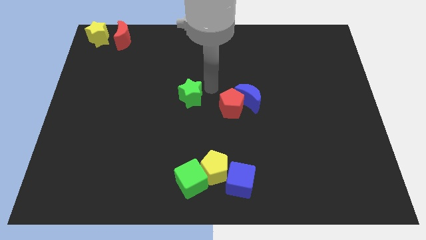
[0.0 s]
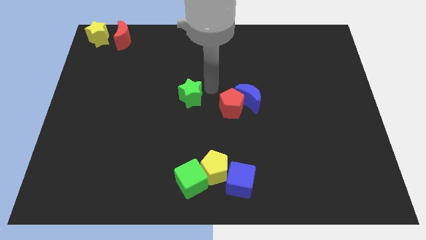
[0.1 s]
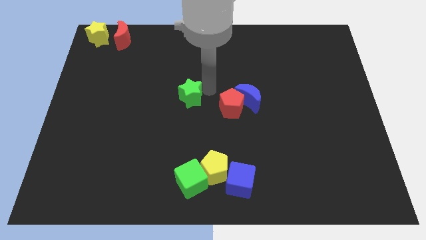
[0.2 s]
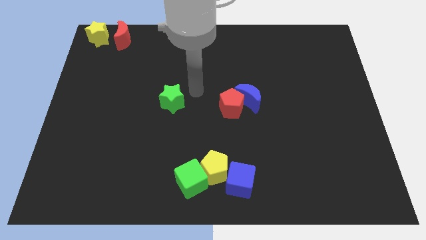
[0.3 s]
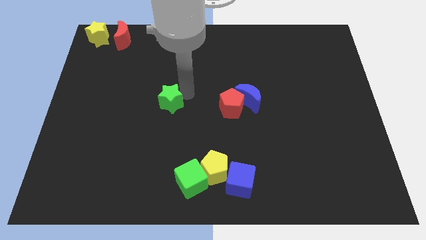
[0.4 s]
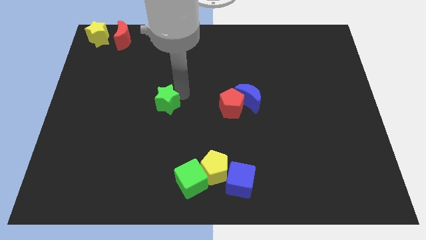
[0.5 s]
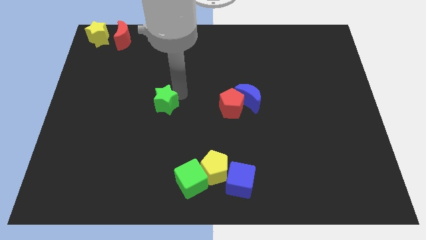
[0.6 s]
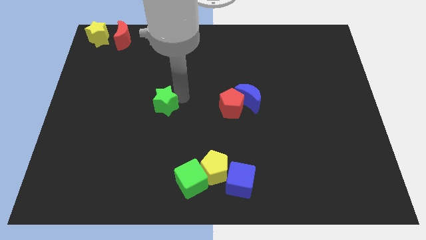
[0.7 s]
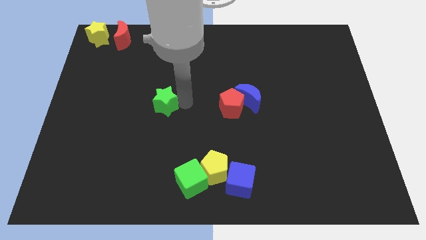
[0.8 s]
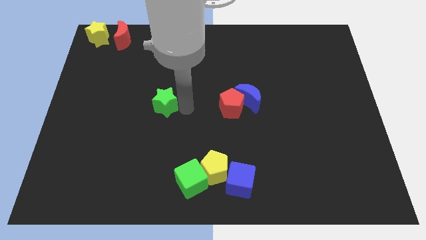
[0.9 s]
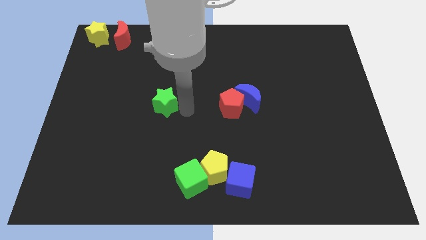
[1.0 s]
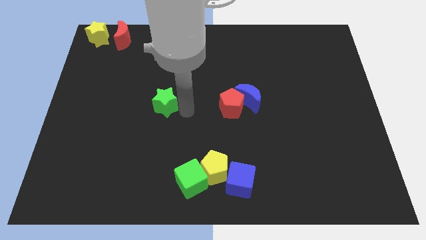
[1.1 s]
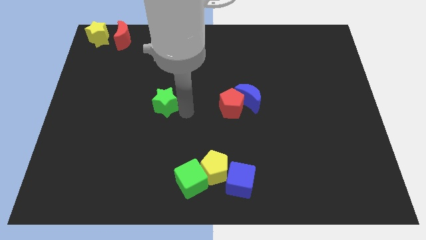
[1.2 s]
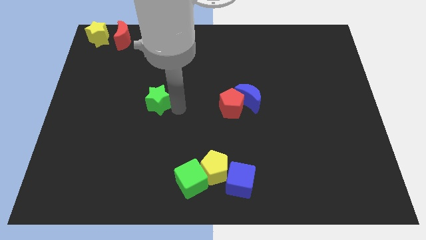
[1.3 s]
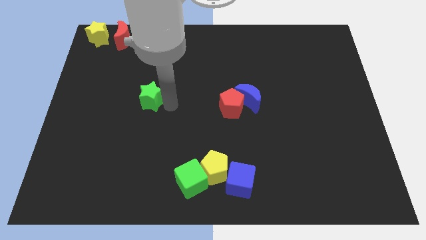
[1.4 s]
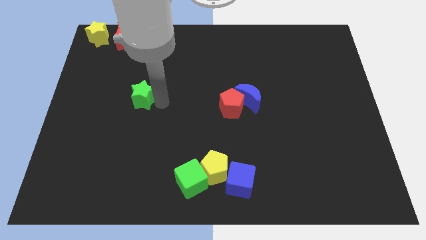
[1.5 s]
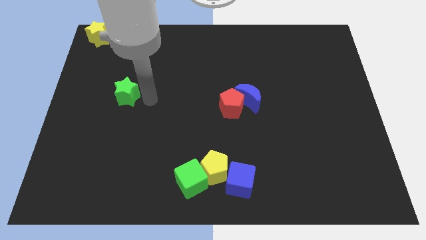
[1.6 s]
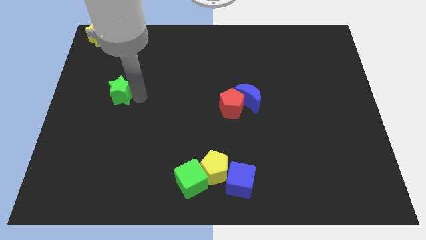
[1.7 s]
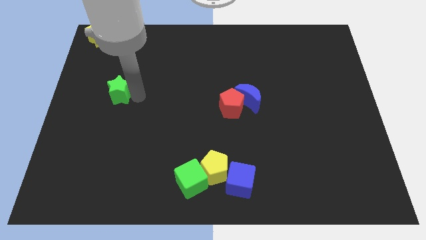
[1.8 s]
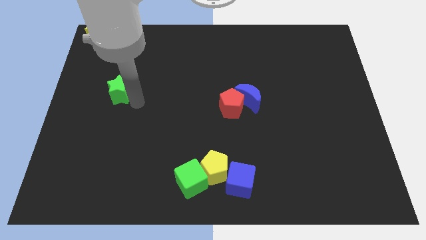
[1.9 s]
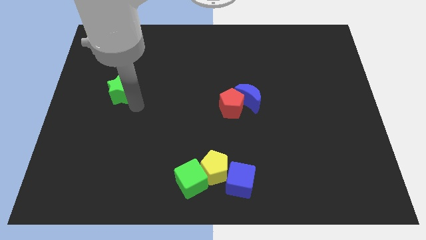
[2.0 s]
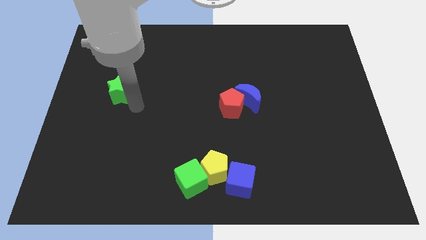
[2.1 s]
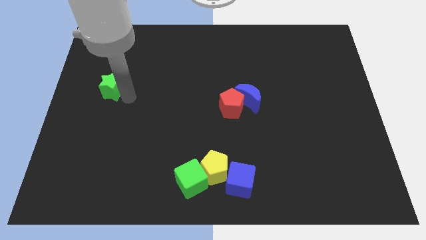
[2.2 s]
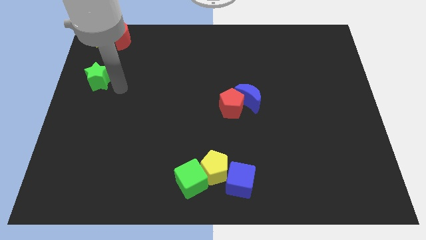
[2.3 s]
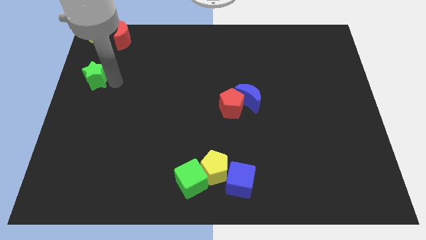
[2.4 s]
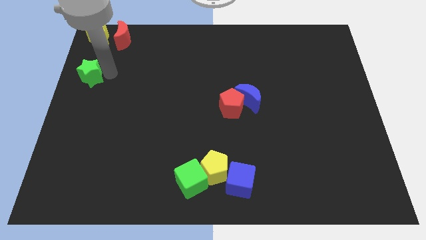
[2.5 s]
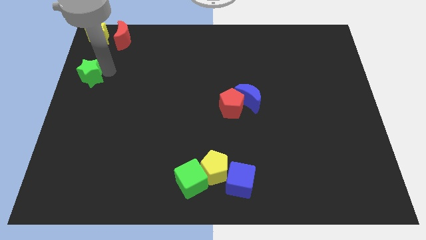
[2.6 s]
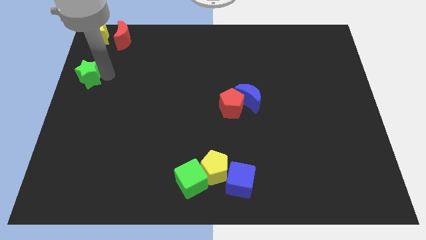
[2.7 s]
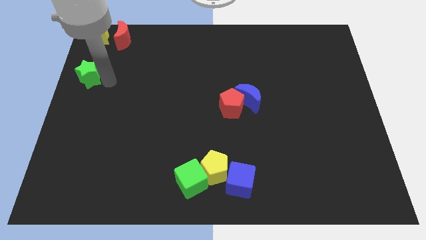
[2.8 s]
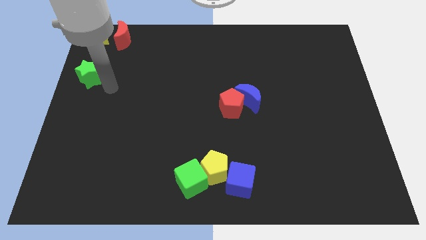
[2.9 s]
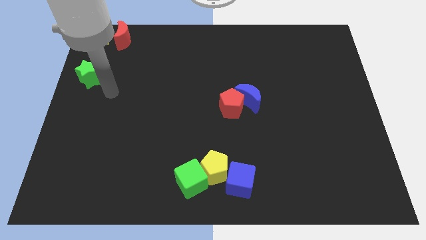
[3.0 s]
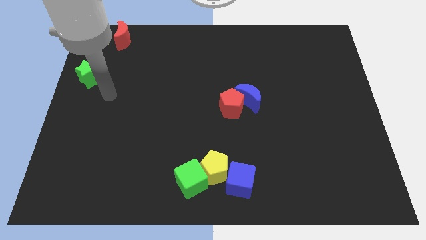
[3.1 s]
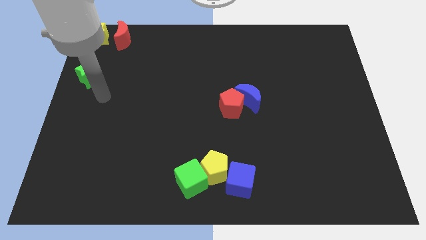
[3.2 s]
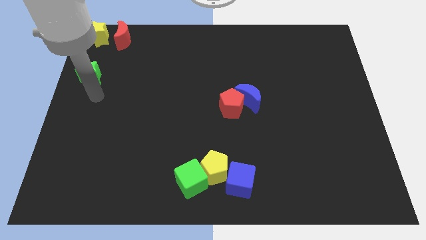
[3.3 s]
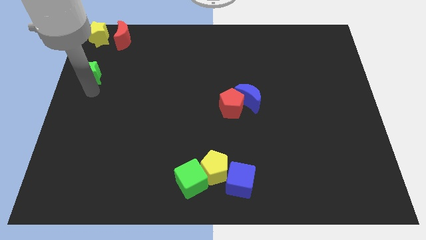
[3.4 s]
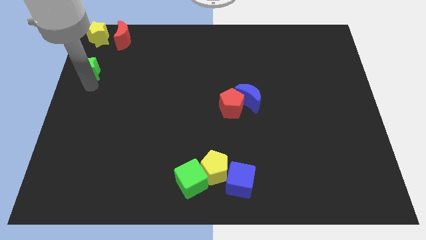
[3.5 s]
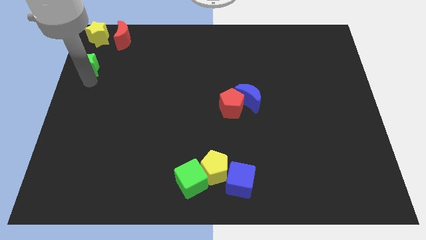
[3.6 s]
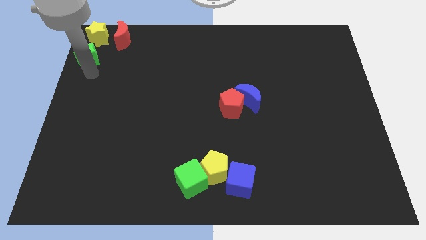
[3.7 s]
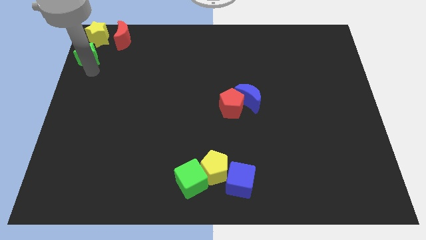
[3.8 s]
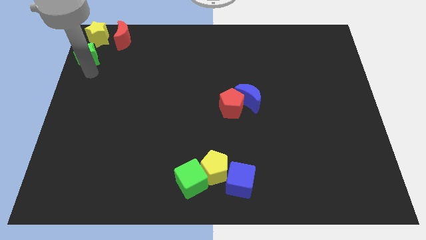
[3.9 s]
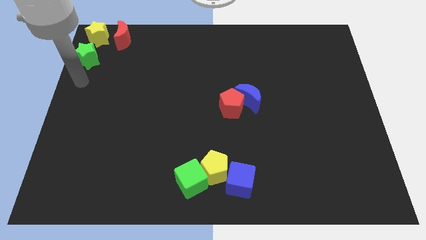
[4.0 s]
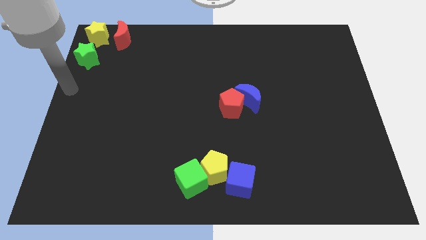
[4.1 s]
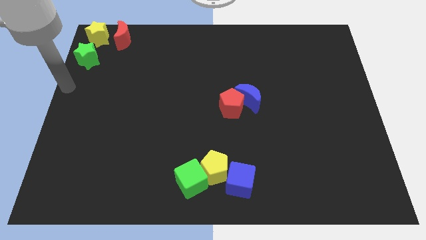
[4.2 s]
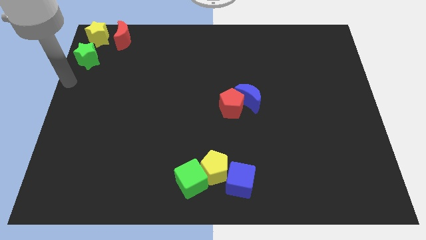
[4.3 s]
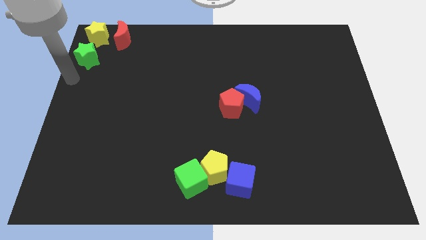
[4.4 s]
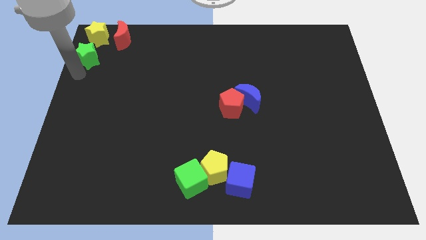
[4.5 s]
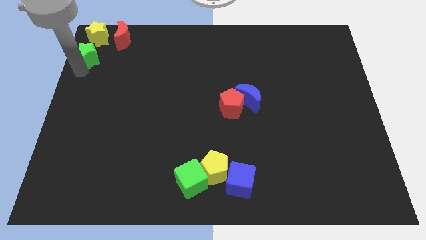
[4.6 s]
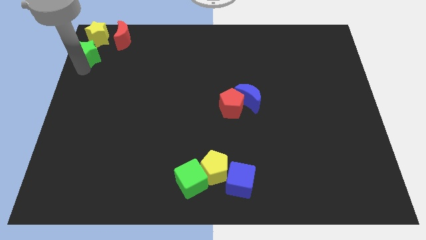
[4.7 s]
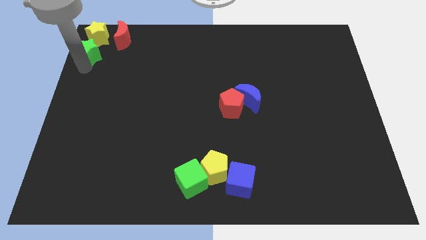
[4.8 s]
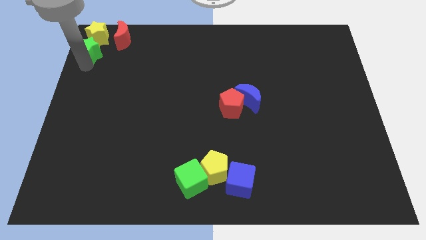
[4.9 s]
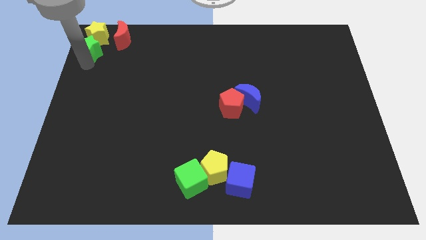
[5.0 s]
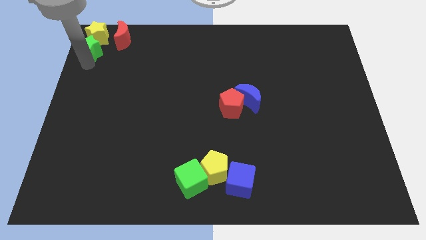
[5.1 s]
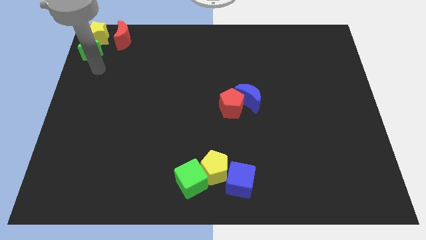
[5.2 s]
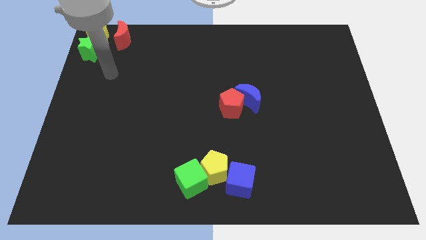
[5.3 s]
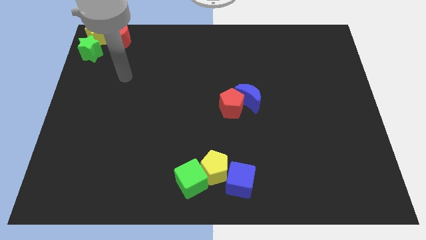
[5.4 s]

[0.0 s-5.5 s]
push the green star to the bottom side of the yellow star

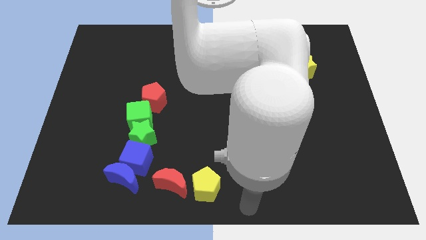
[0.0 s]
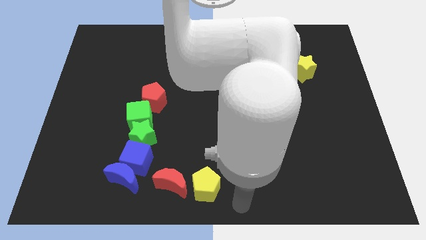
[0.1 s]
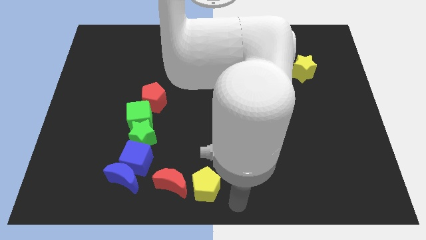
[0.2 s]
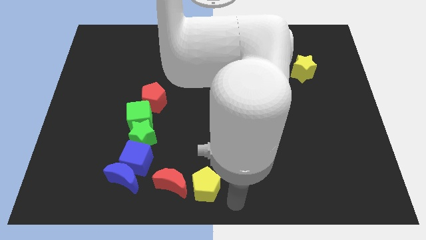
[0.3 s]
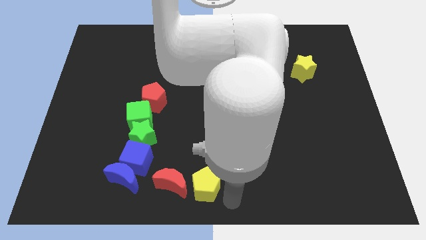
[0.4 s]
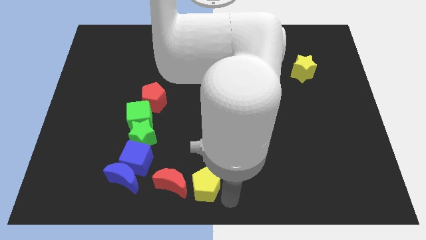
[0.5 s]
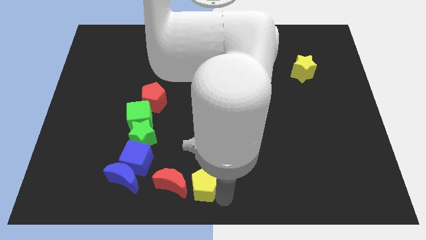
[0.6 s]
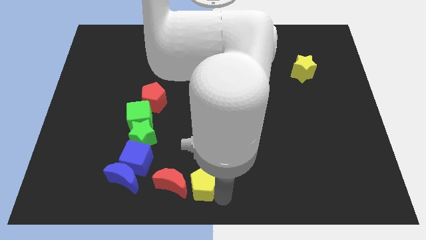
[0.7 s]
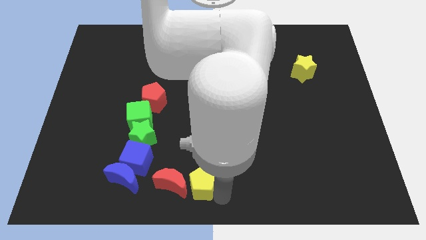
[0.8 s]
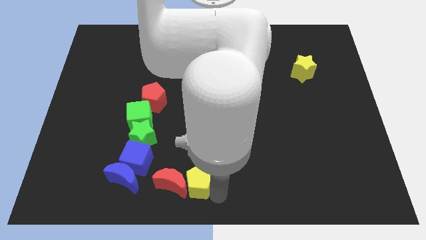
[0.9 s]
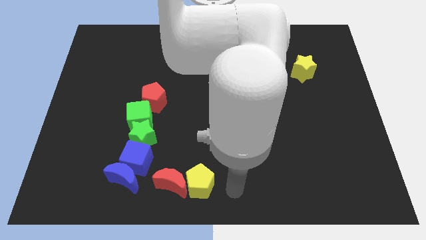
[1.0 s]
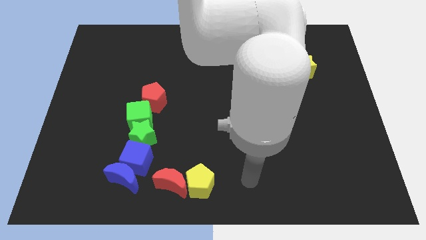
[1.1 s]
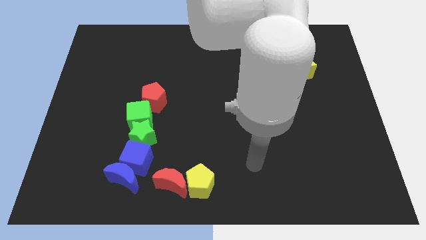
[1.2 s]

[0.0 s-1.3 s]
move the yellow pentagon into the red moon

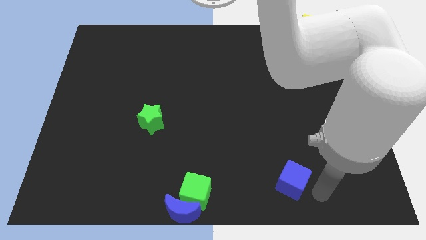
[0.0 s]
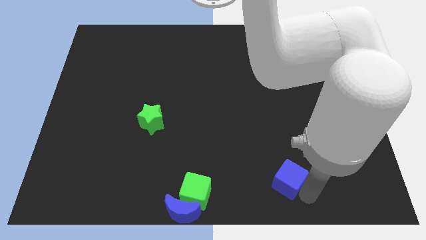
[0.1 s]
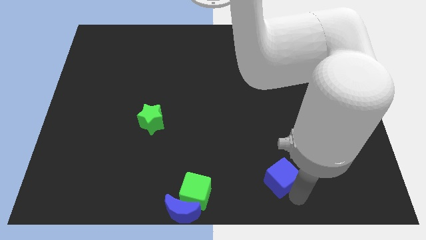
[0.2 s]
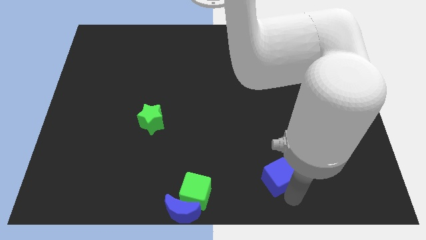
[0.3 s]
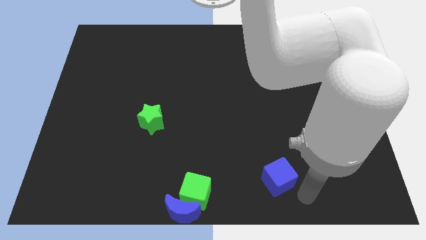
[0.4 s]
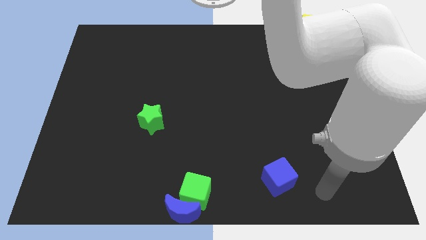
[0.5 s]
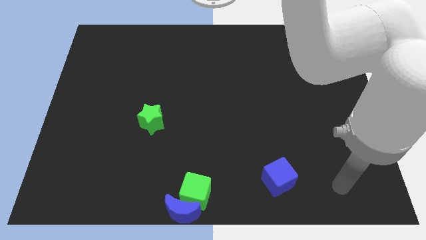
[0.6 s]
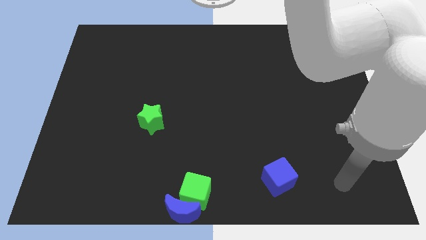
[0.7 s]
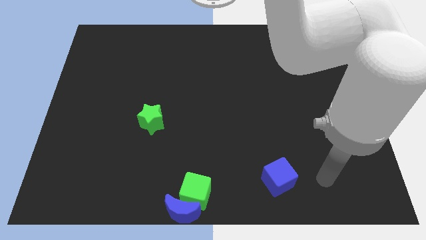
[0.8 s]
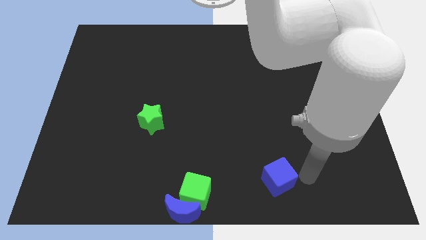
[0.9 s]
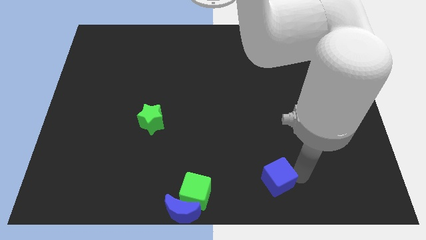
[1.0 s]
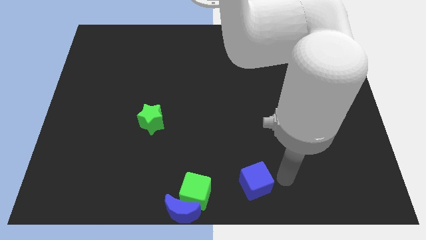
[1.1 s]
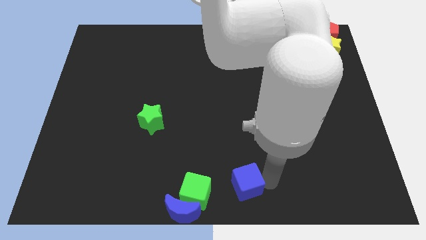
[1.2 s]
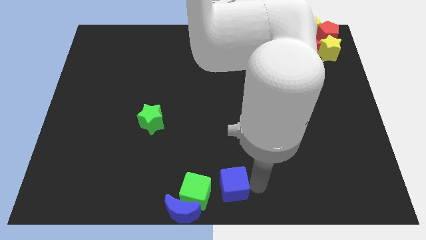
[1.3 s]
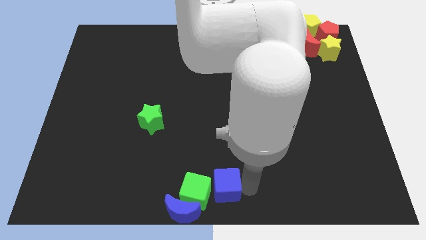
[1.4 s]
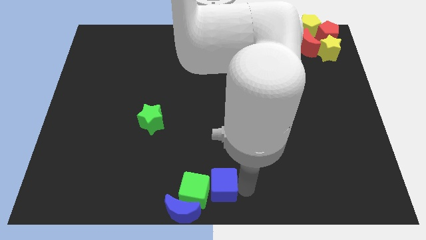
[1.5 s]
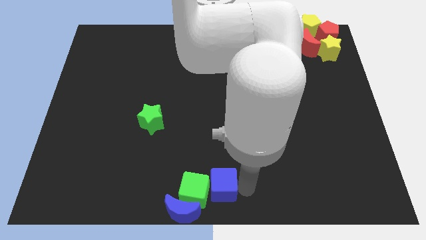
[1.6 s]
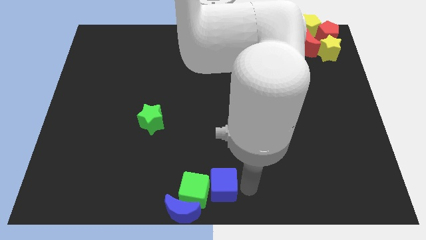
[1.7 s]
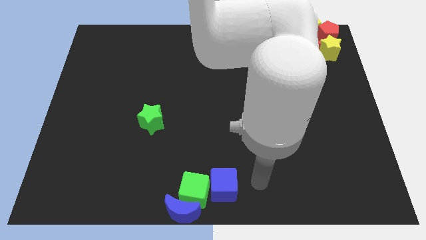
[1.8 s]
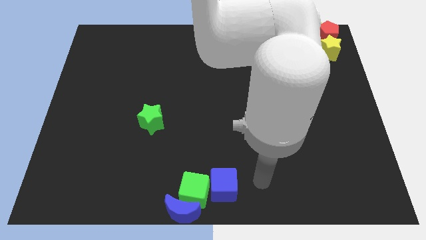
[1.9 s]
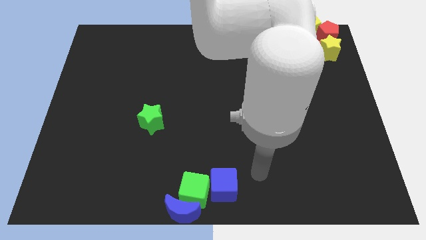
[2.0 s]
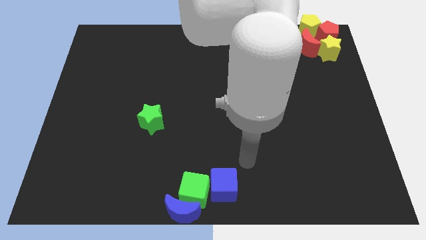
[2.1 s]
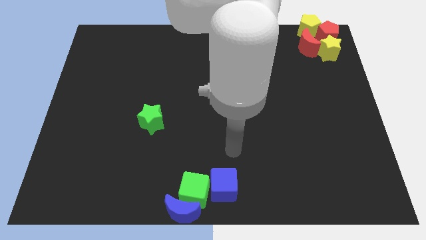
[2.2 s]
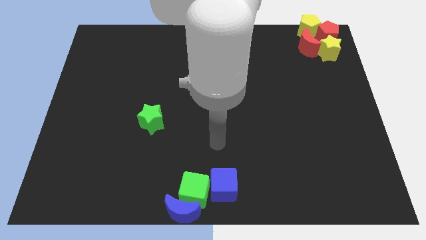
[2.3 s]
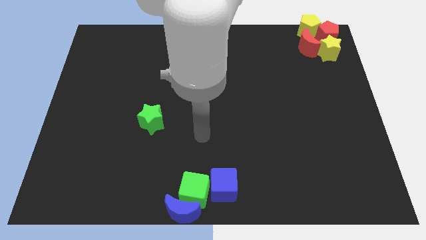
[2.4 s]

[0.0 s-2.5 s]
push the blue cube to the right of green cube
